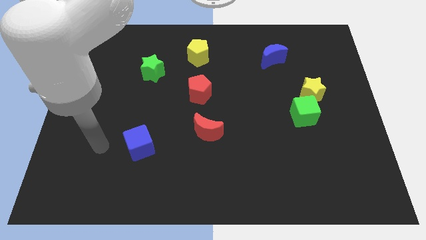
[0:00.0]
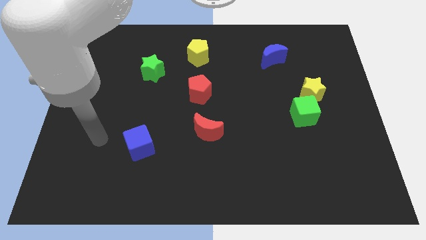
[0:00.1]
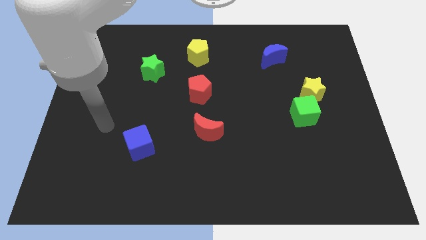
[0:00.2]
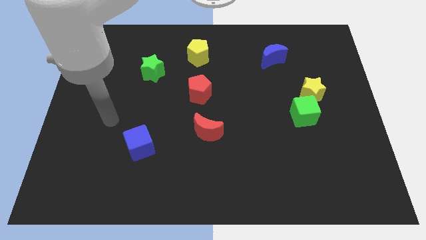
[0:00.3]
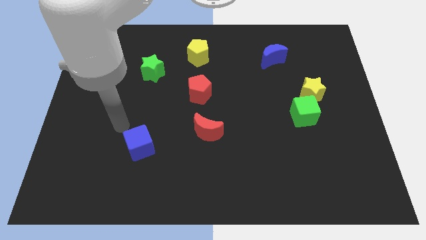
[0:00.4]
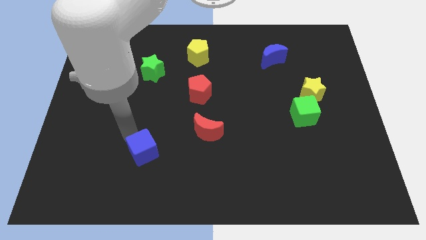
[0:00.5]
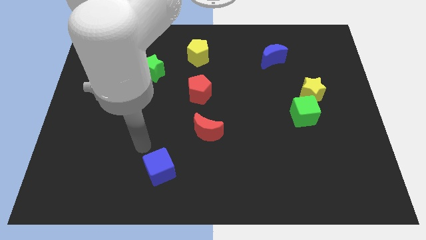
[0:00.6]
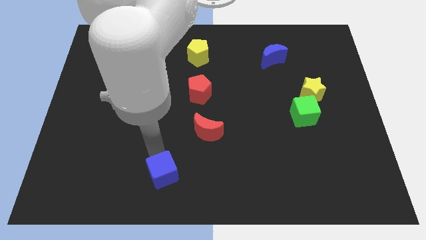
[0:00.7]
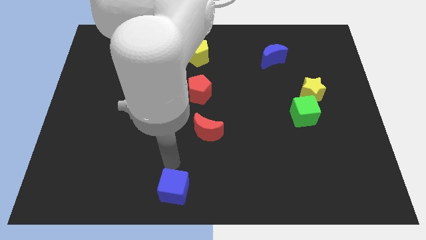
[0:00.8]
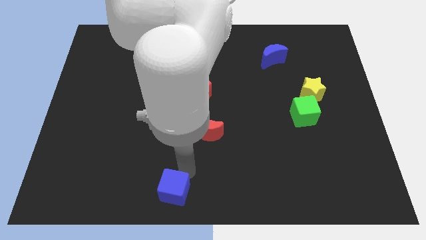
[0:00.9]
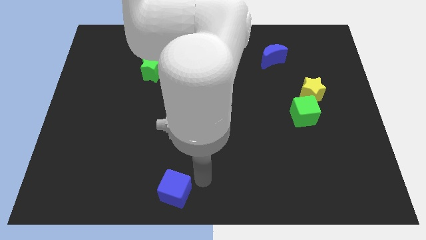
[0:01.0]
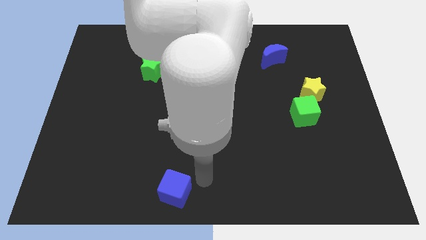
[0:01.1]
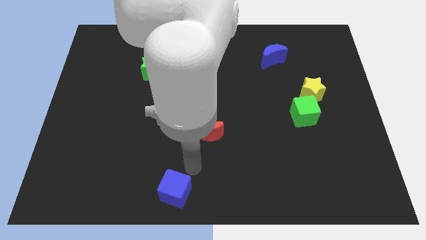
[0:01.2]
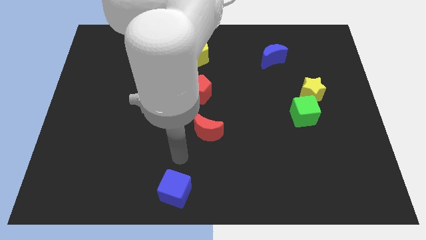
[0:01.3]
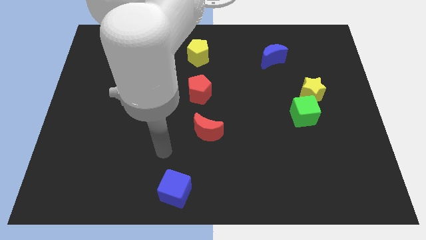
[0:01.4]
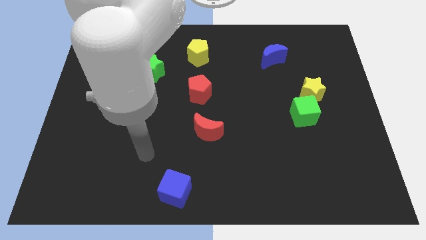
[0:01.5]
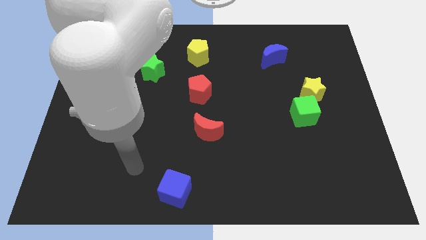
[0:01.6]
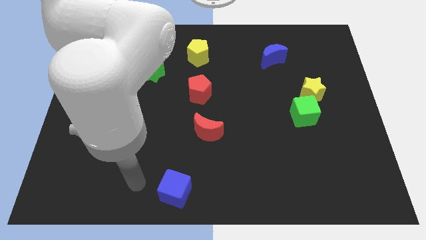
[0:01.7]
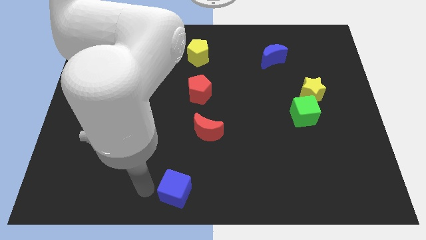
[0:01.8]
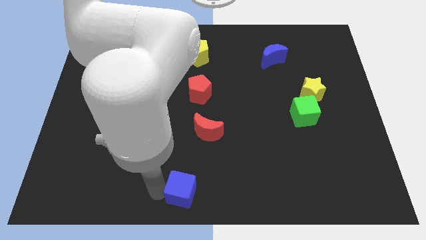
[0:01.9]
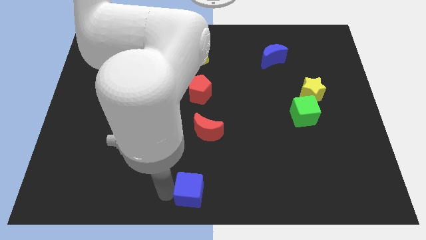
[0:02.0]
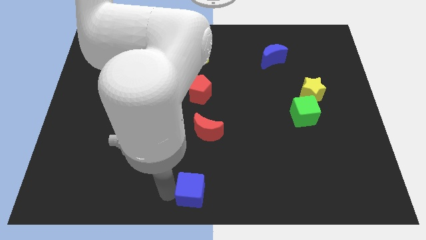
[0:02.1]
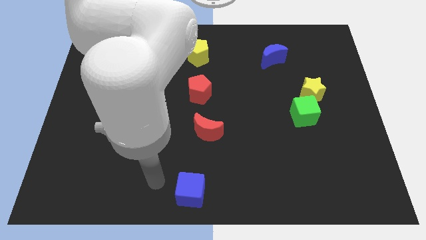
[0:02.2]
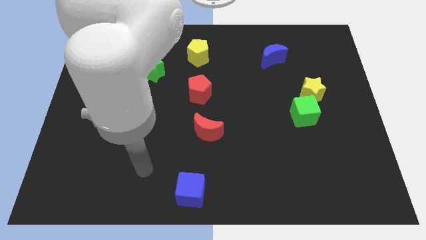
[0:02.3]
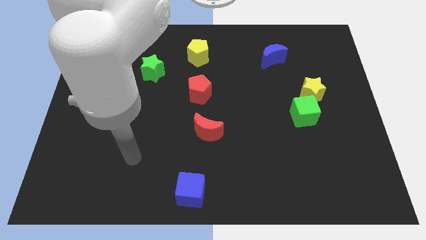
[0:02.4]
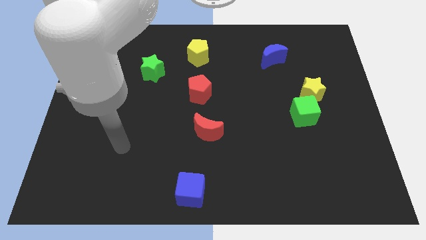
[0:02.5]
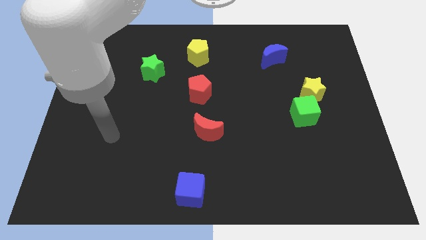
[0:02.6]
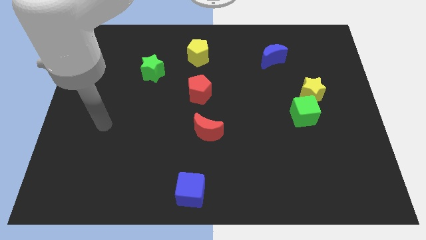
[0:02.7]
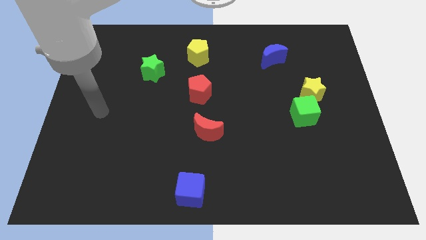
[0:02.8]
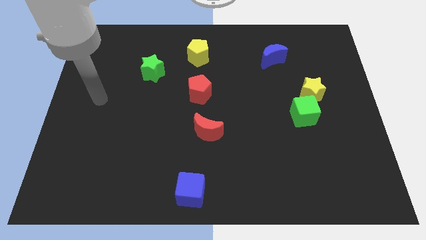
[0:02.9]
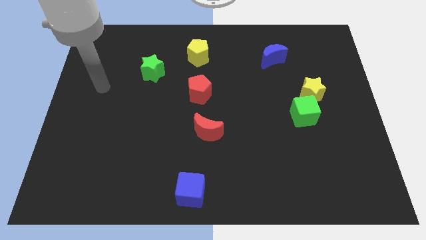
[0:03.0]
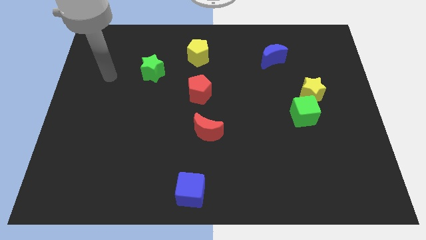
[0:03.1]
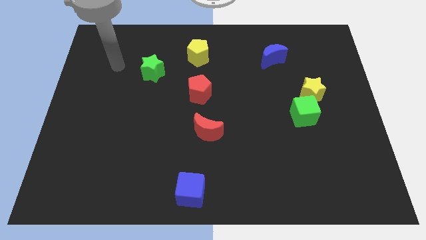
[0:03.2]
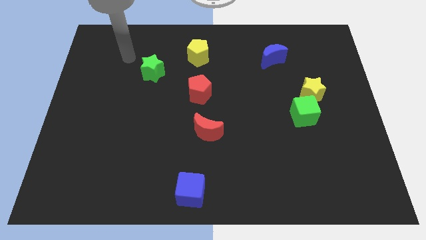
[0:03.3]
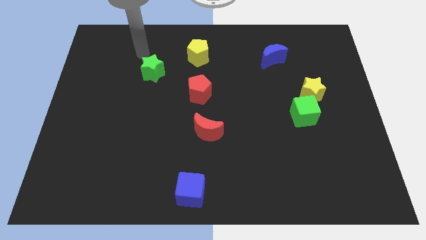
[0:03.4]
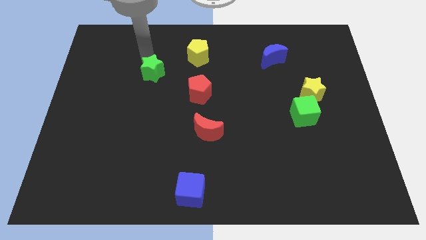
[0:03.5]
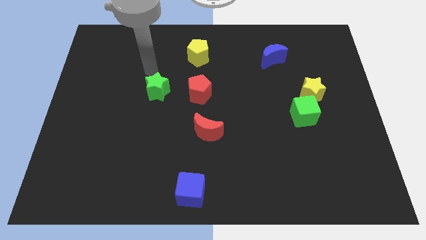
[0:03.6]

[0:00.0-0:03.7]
push blue cube towards bottom of the board

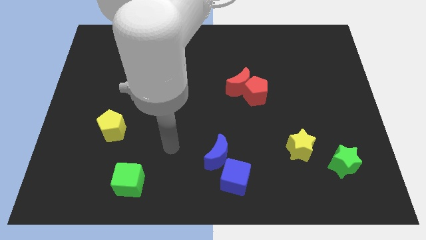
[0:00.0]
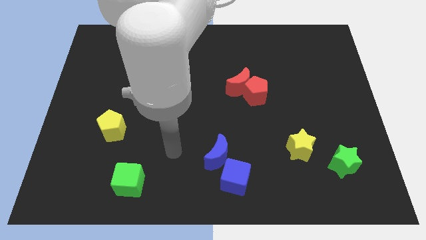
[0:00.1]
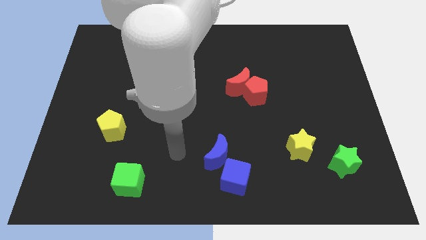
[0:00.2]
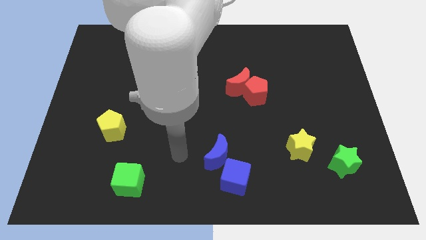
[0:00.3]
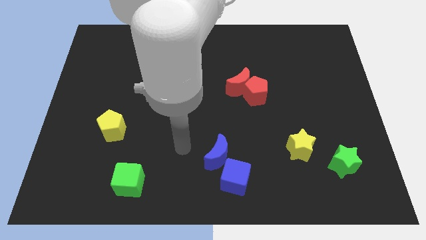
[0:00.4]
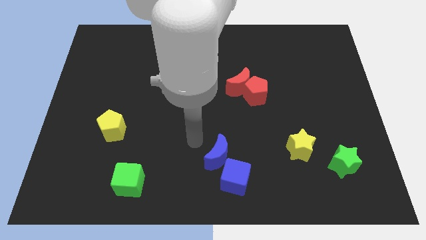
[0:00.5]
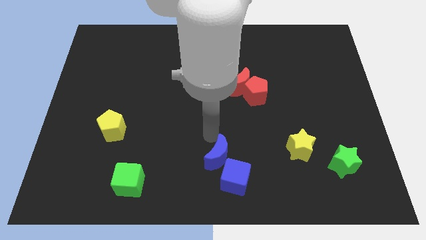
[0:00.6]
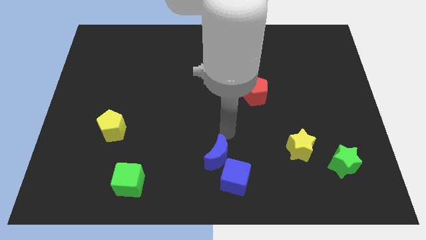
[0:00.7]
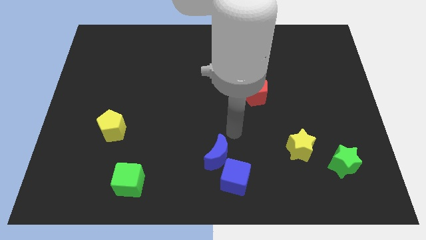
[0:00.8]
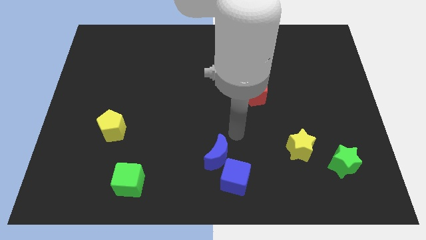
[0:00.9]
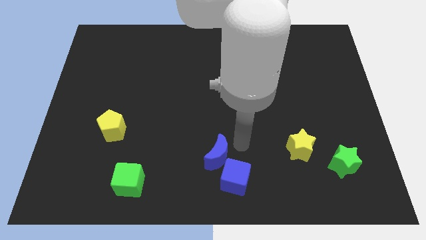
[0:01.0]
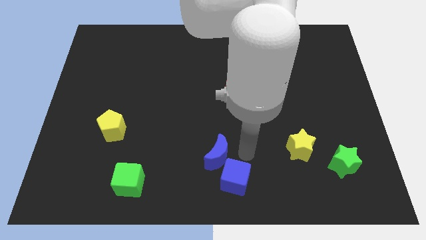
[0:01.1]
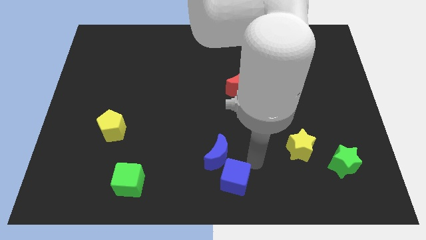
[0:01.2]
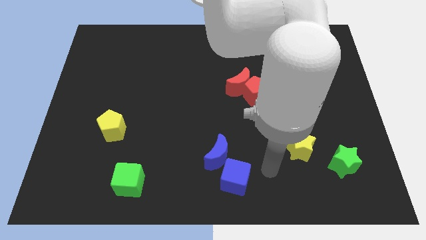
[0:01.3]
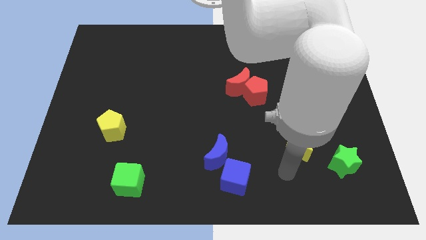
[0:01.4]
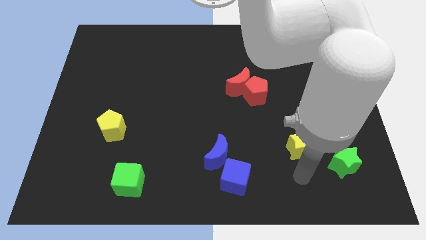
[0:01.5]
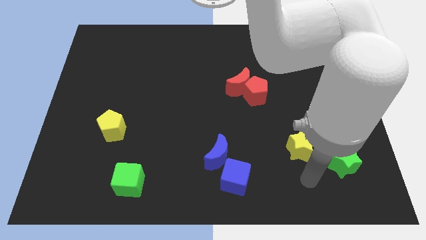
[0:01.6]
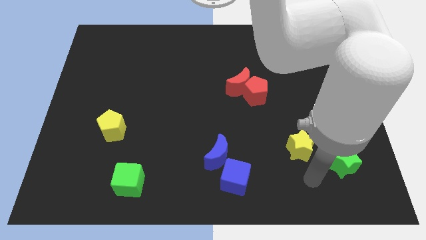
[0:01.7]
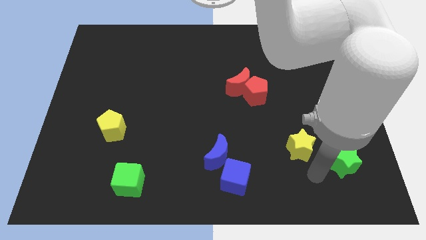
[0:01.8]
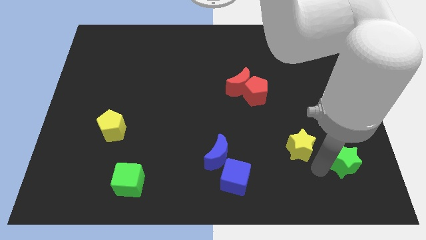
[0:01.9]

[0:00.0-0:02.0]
point your arm below the green star at the bottom

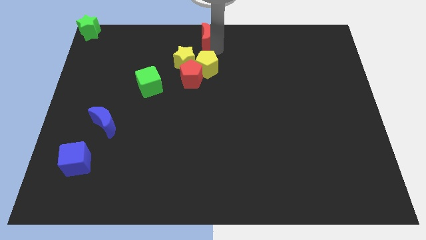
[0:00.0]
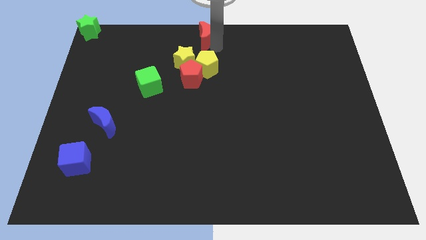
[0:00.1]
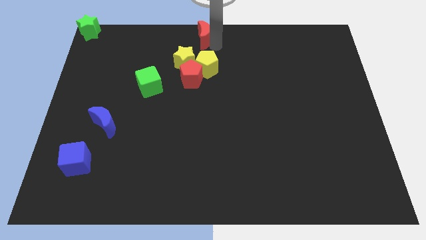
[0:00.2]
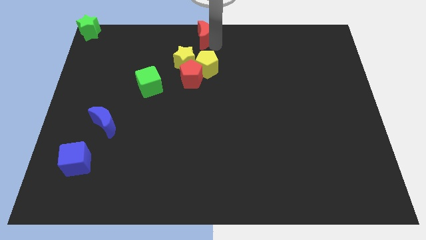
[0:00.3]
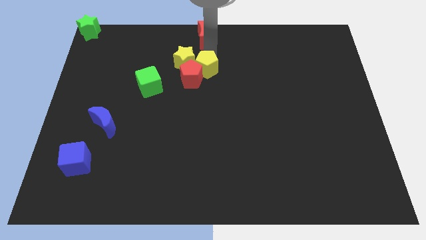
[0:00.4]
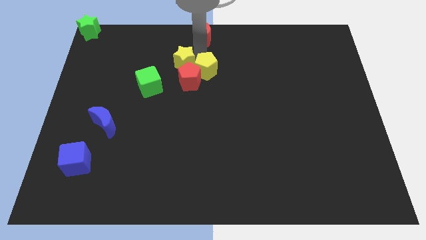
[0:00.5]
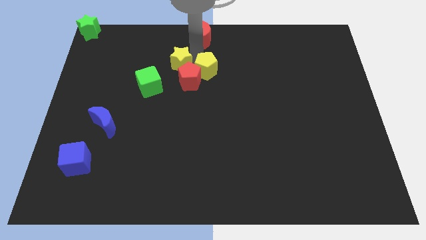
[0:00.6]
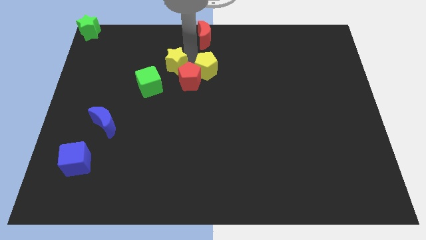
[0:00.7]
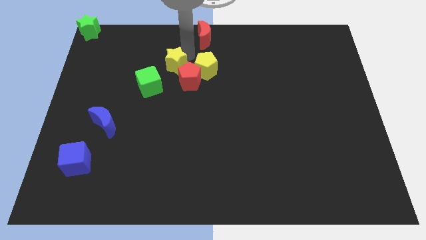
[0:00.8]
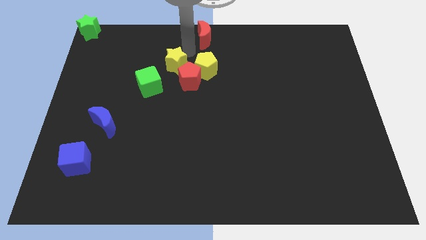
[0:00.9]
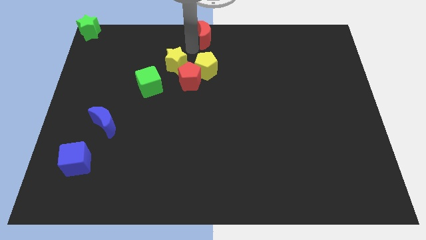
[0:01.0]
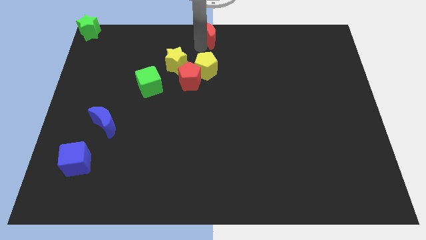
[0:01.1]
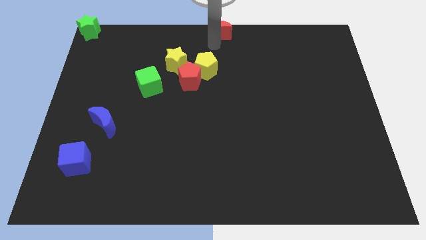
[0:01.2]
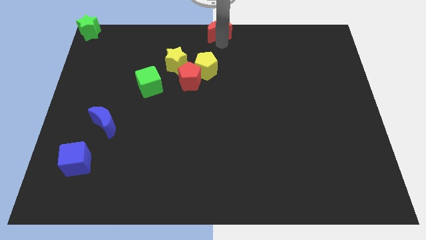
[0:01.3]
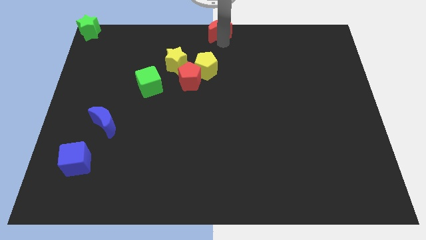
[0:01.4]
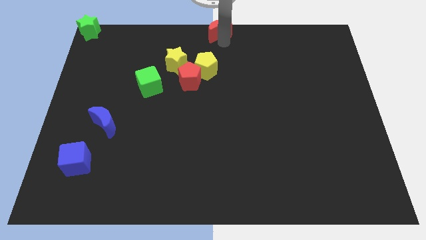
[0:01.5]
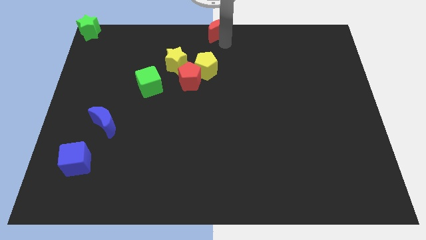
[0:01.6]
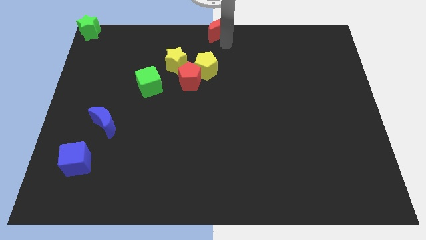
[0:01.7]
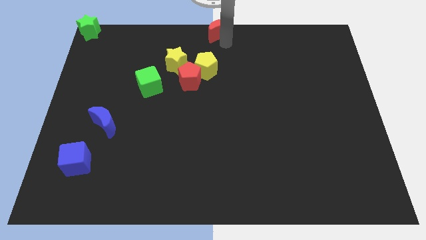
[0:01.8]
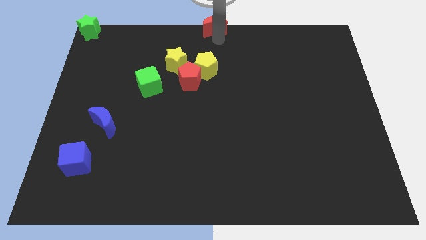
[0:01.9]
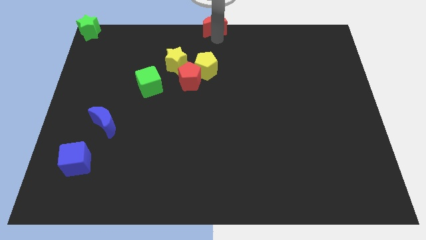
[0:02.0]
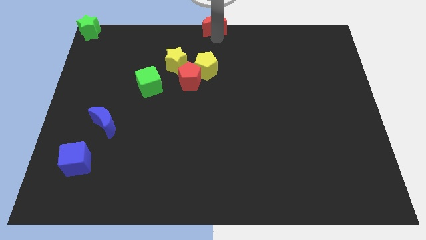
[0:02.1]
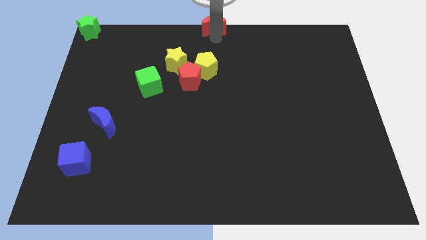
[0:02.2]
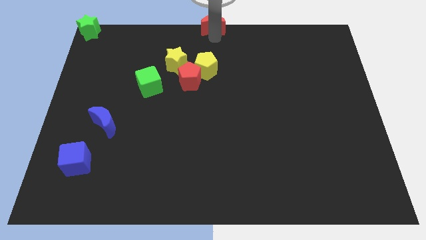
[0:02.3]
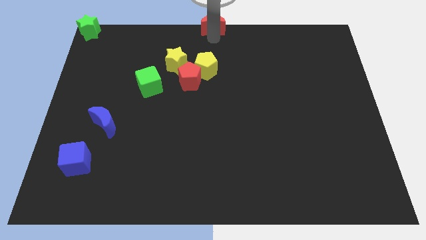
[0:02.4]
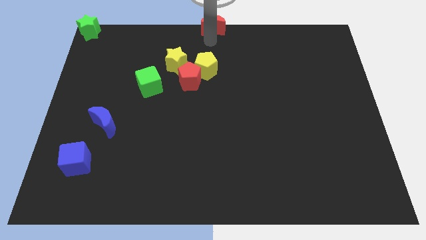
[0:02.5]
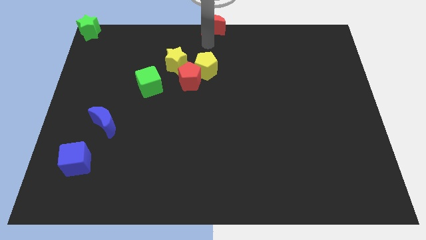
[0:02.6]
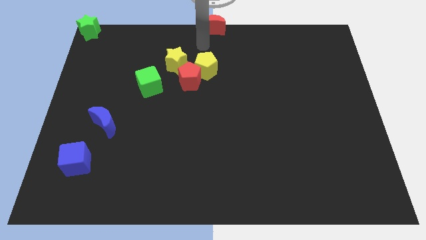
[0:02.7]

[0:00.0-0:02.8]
place the red moon at the top center of the board

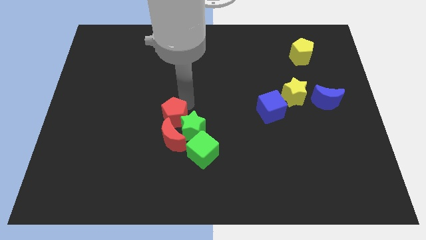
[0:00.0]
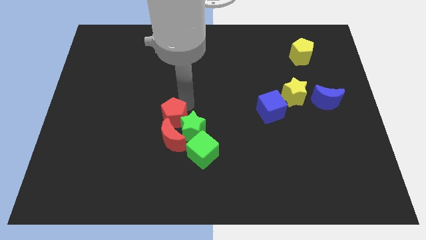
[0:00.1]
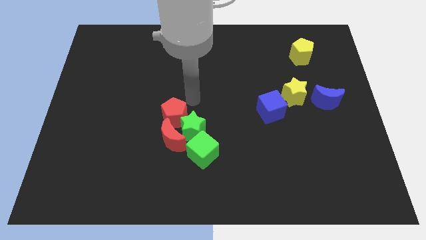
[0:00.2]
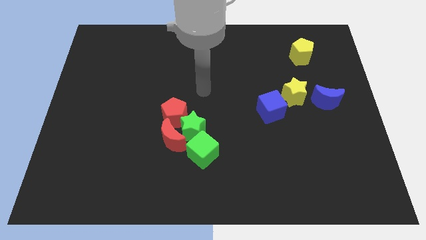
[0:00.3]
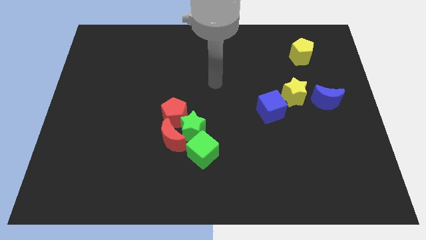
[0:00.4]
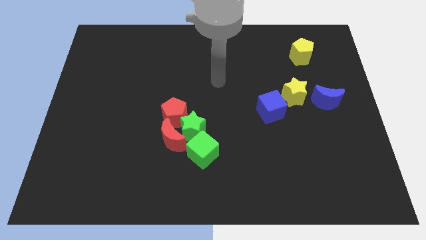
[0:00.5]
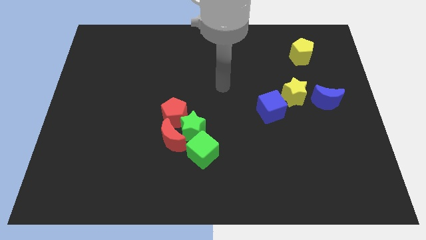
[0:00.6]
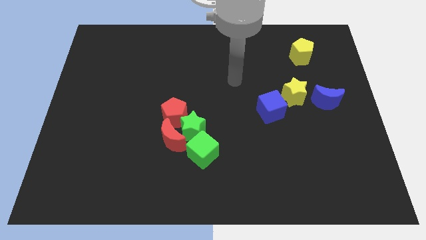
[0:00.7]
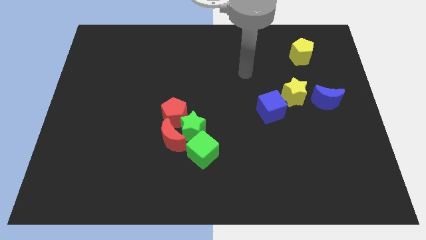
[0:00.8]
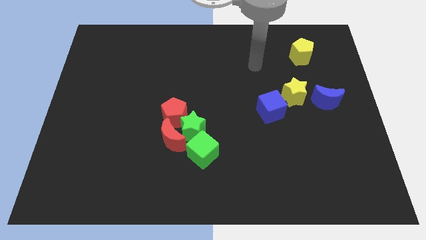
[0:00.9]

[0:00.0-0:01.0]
move your arm away from red pentagon
